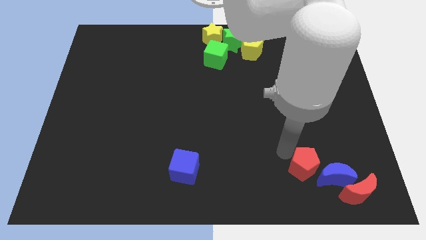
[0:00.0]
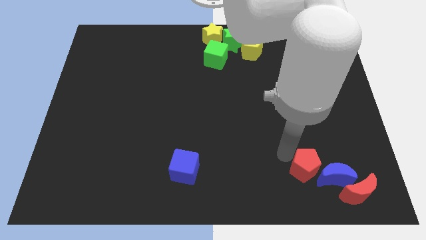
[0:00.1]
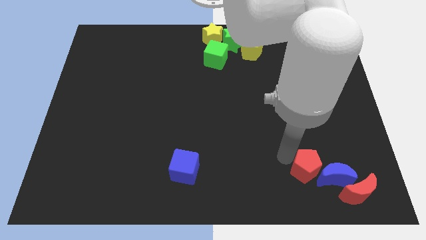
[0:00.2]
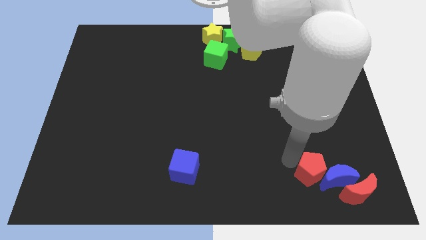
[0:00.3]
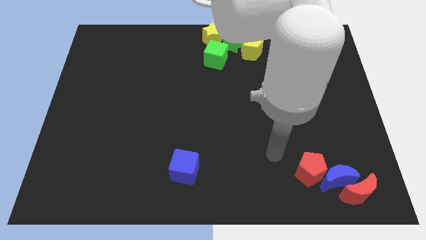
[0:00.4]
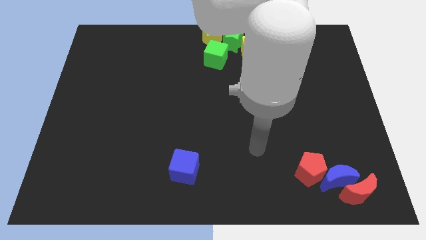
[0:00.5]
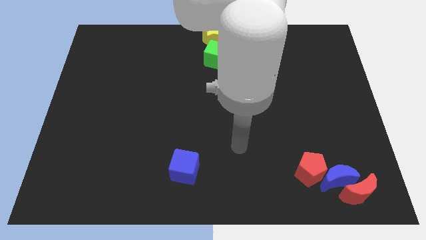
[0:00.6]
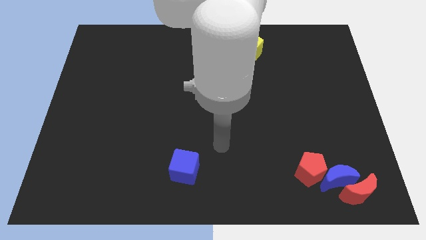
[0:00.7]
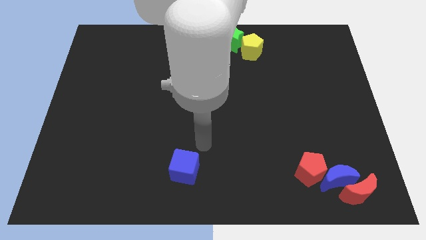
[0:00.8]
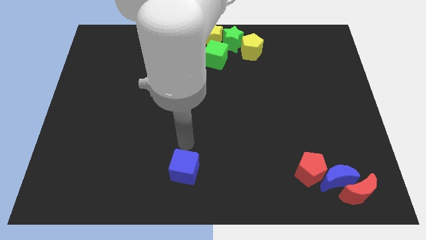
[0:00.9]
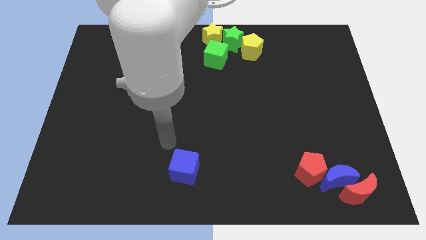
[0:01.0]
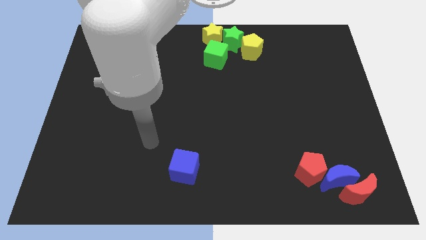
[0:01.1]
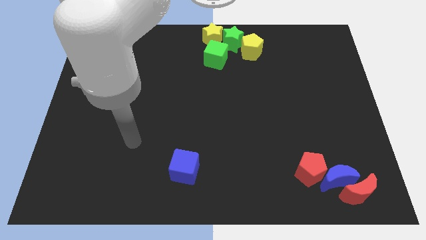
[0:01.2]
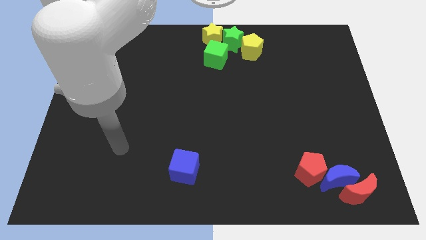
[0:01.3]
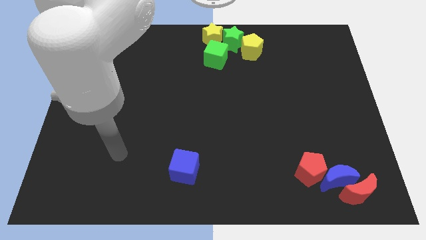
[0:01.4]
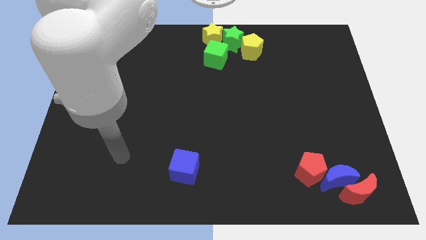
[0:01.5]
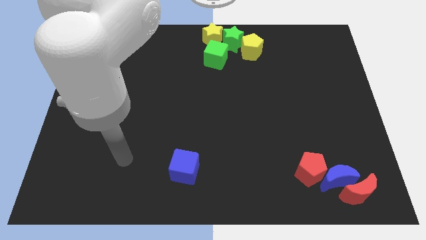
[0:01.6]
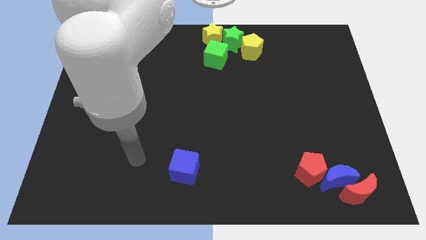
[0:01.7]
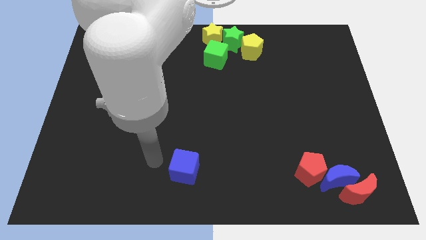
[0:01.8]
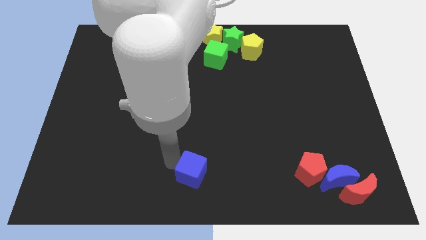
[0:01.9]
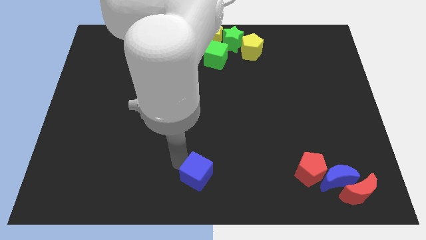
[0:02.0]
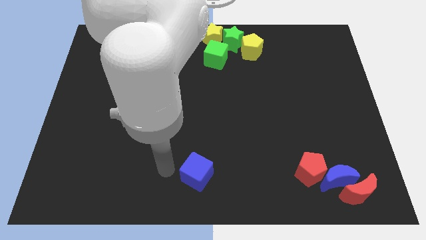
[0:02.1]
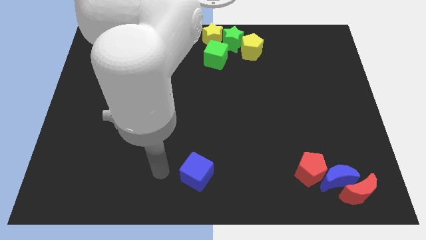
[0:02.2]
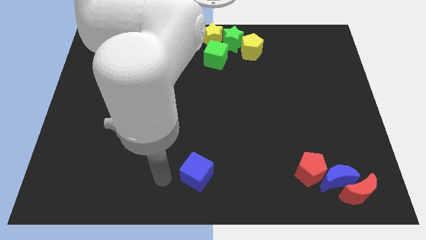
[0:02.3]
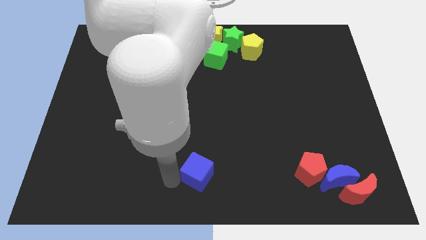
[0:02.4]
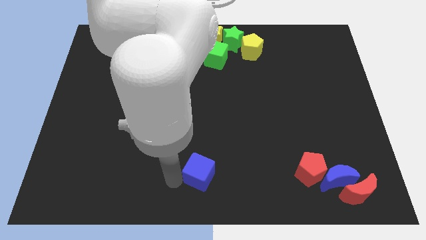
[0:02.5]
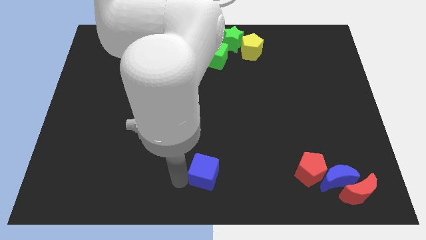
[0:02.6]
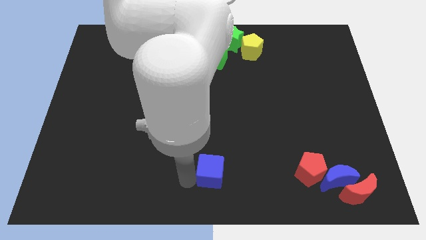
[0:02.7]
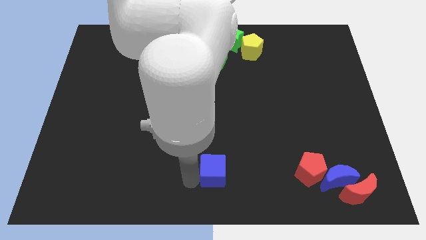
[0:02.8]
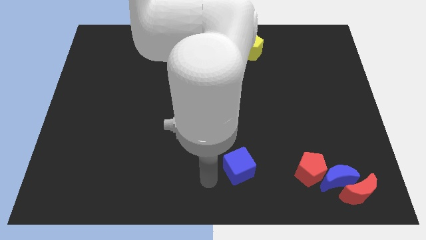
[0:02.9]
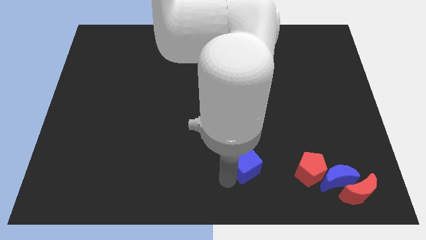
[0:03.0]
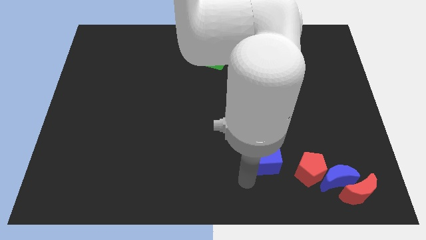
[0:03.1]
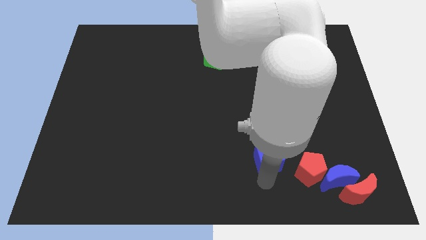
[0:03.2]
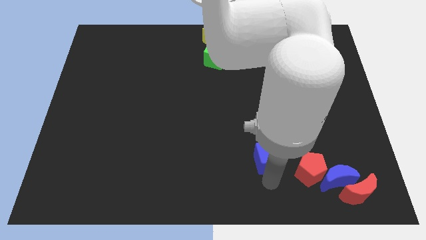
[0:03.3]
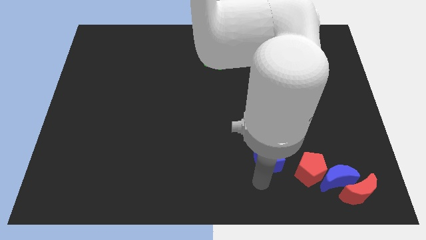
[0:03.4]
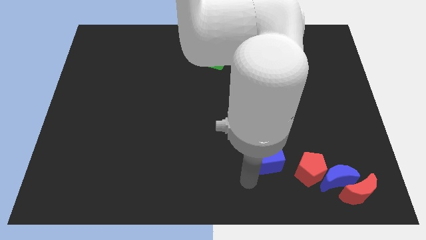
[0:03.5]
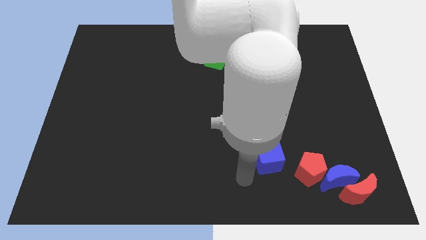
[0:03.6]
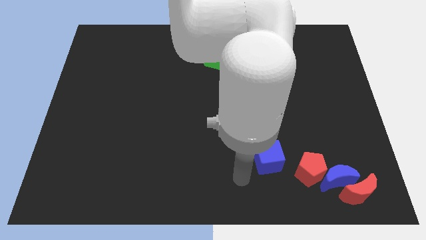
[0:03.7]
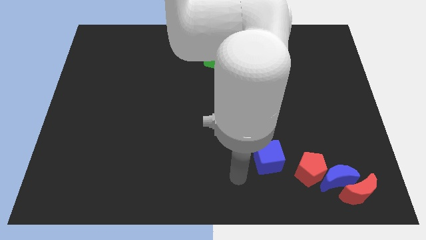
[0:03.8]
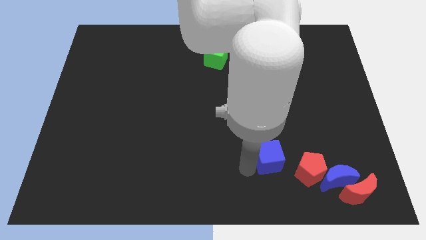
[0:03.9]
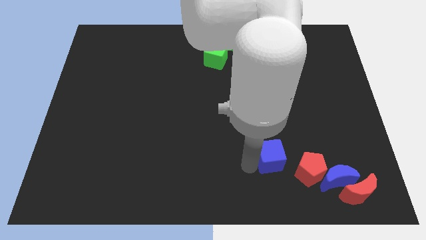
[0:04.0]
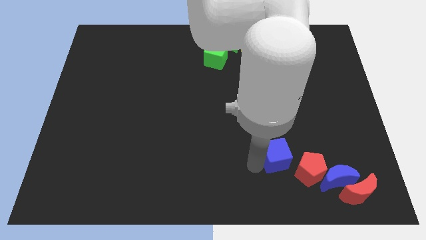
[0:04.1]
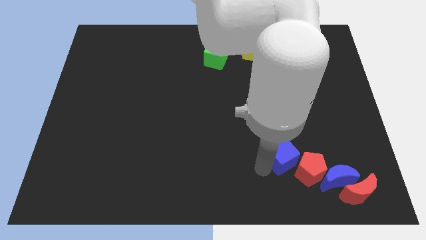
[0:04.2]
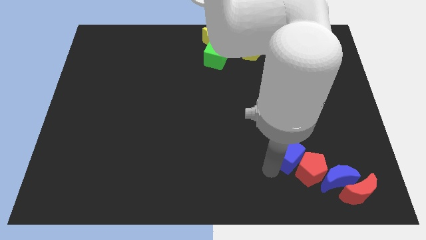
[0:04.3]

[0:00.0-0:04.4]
push the blue cube above the red pentagon

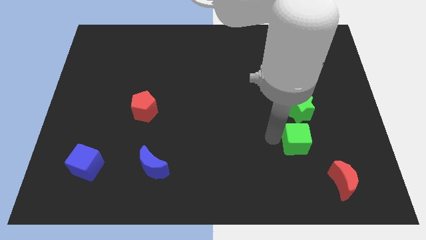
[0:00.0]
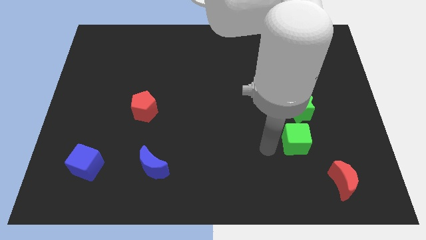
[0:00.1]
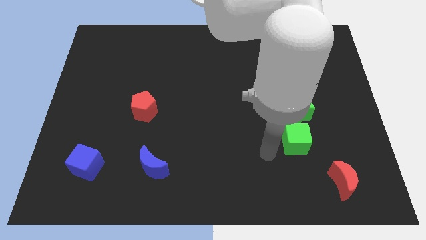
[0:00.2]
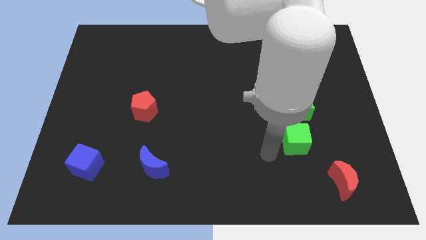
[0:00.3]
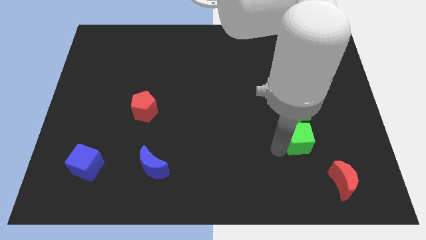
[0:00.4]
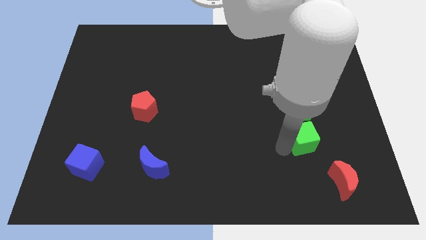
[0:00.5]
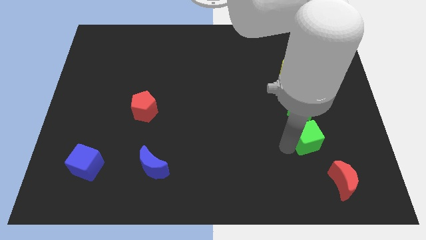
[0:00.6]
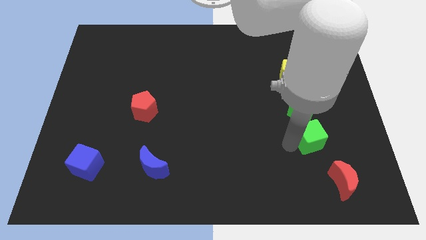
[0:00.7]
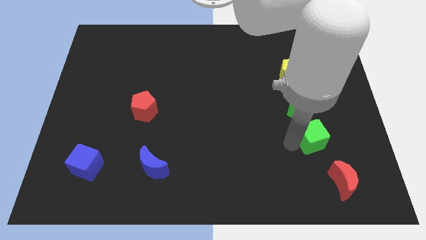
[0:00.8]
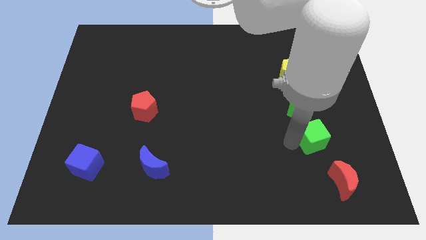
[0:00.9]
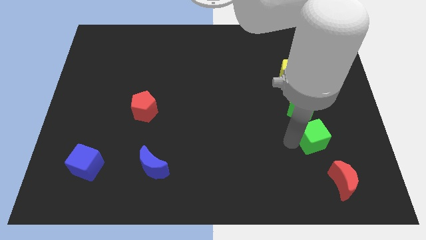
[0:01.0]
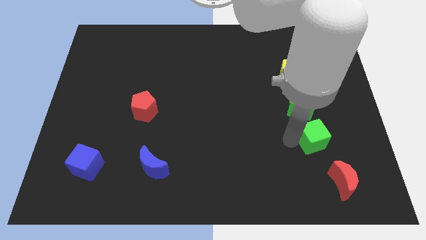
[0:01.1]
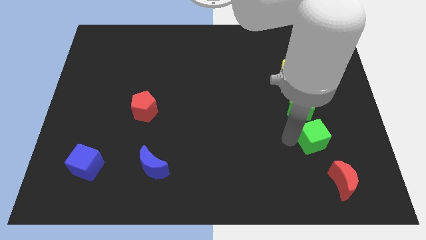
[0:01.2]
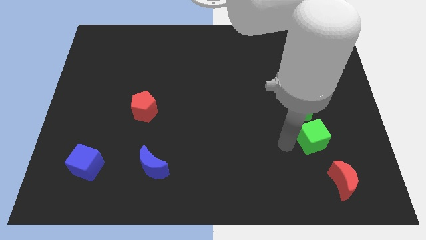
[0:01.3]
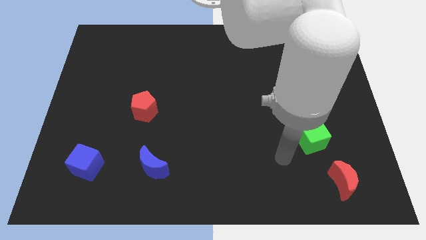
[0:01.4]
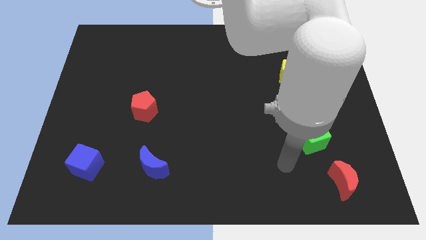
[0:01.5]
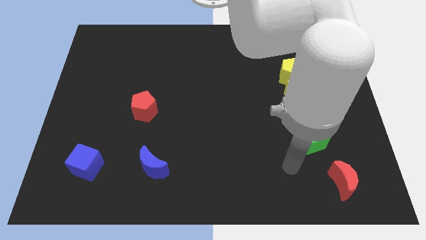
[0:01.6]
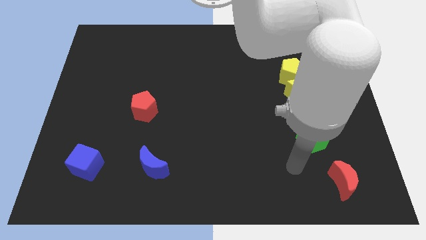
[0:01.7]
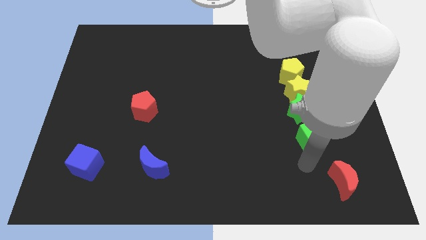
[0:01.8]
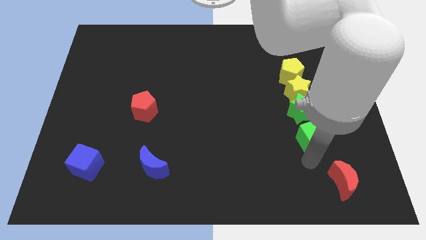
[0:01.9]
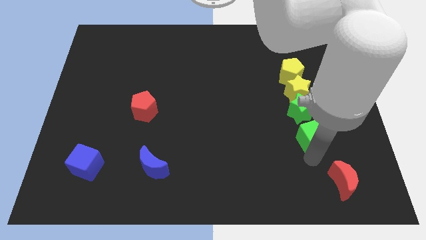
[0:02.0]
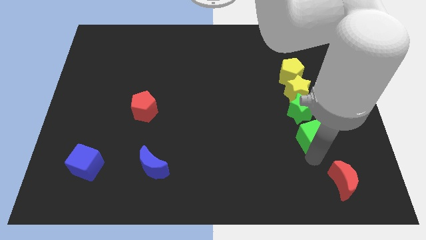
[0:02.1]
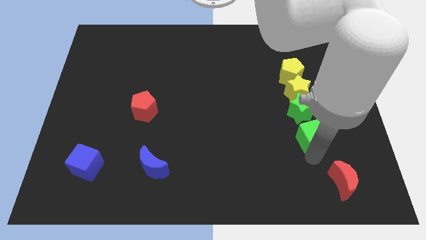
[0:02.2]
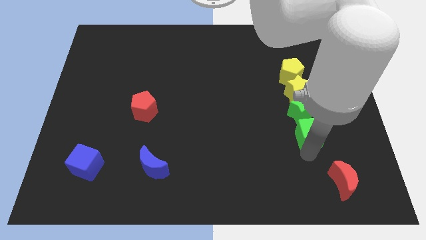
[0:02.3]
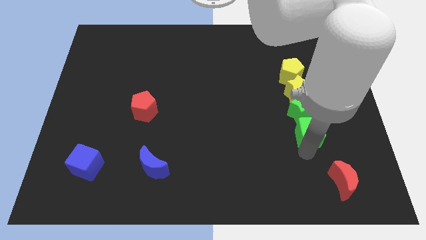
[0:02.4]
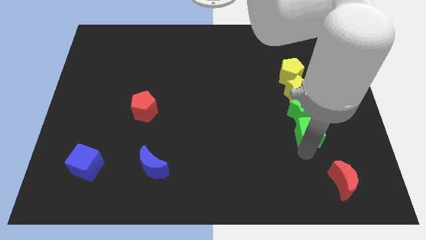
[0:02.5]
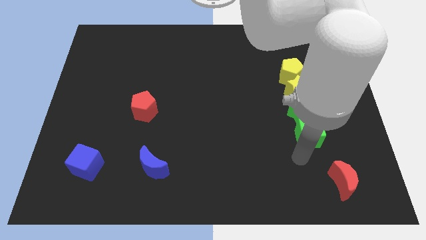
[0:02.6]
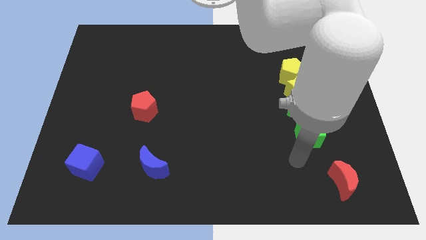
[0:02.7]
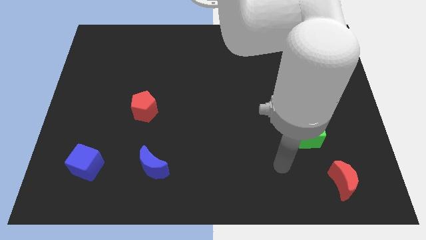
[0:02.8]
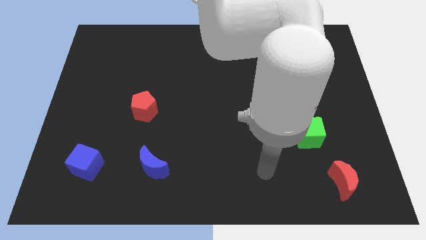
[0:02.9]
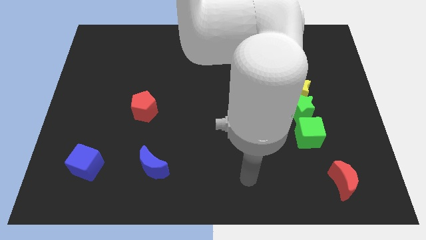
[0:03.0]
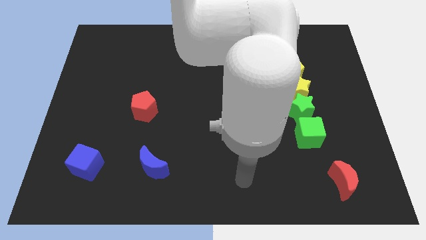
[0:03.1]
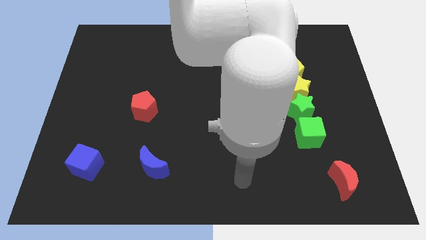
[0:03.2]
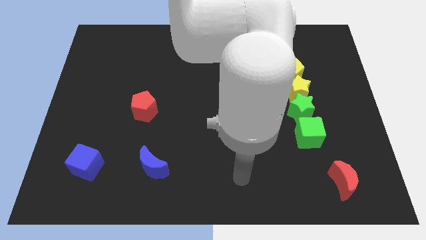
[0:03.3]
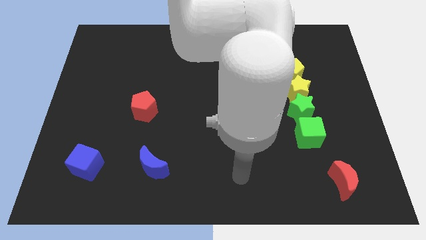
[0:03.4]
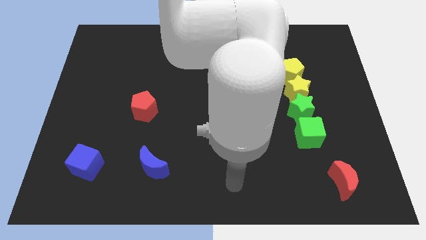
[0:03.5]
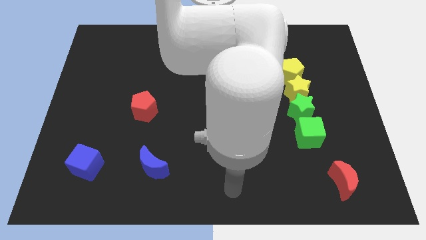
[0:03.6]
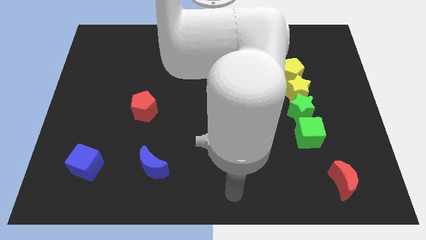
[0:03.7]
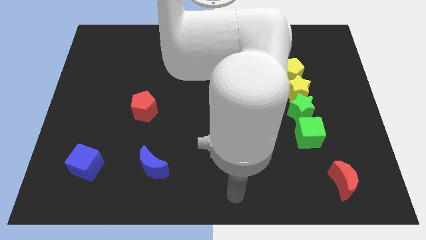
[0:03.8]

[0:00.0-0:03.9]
move your arm towards the bottom center of the board

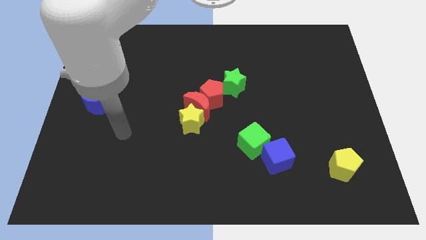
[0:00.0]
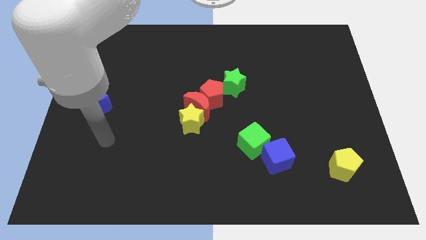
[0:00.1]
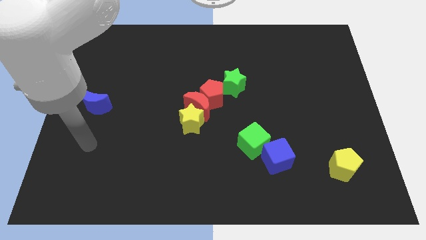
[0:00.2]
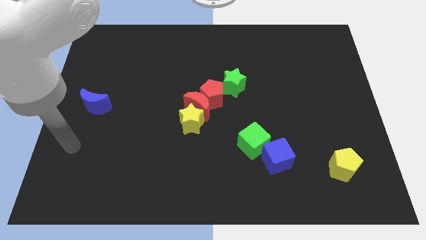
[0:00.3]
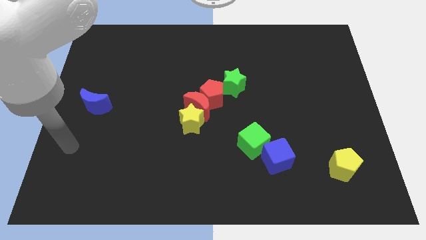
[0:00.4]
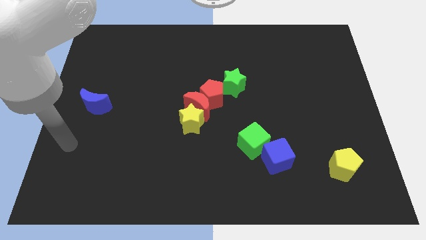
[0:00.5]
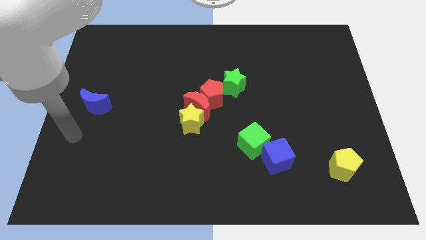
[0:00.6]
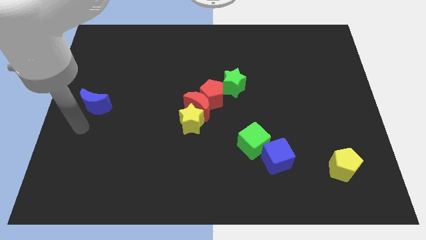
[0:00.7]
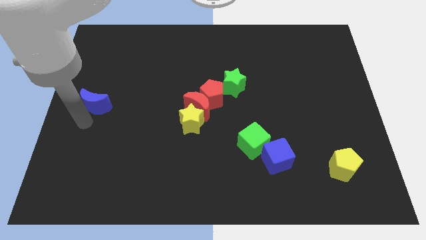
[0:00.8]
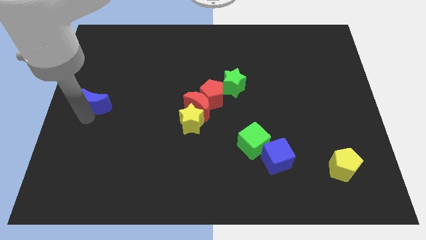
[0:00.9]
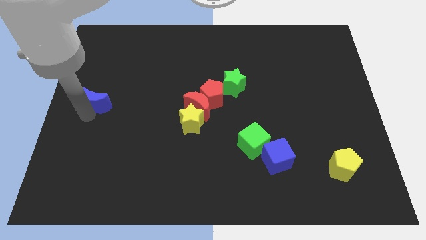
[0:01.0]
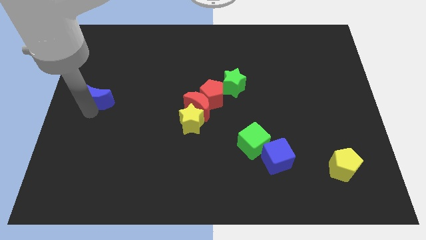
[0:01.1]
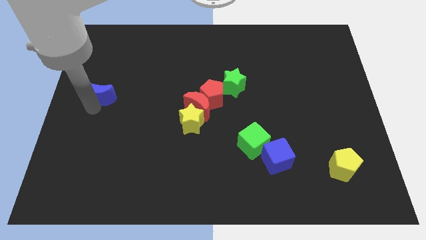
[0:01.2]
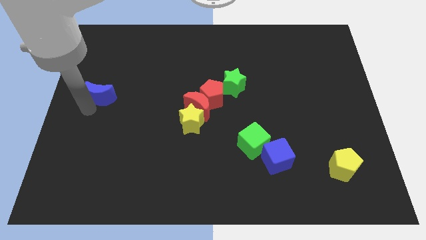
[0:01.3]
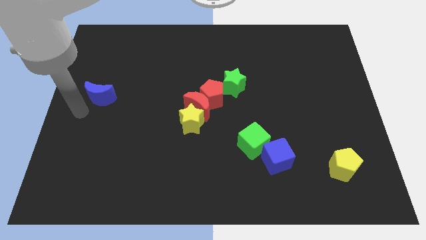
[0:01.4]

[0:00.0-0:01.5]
move the blue moon slightly up
